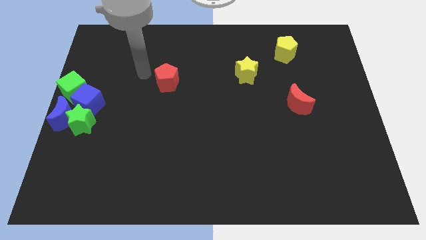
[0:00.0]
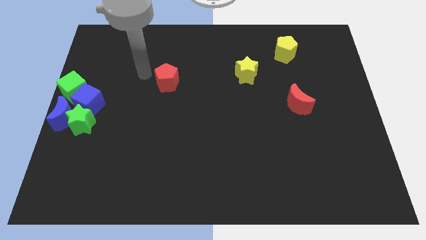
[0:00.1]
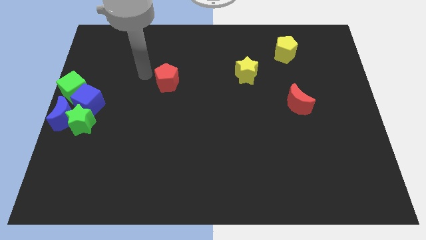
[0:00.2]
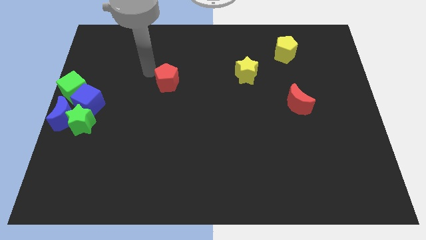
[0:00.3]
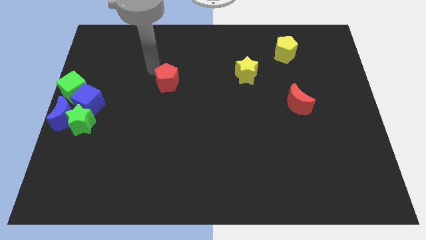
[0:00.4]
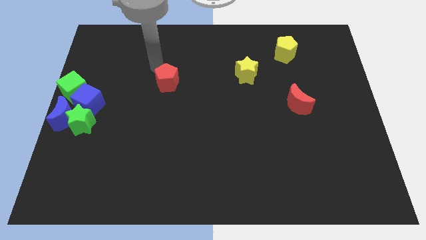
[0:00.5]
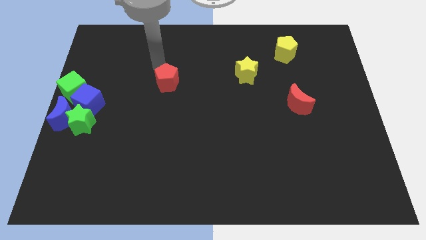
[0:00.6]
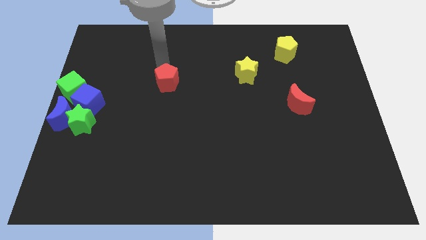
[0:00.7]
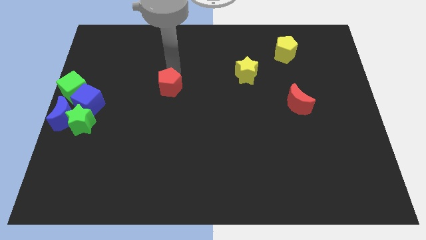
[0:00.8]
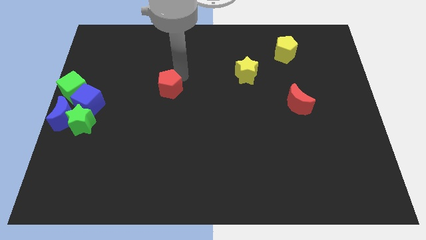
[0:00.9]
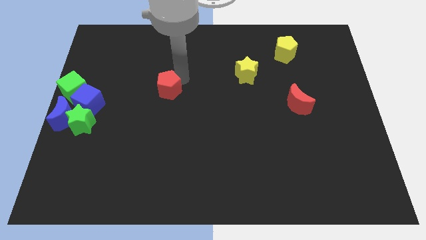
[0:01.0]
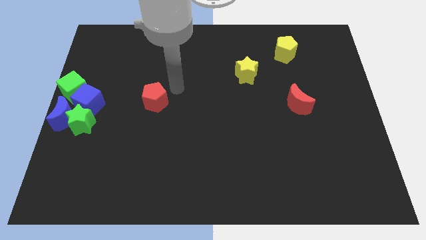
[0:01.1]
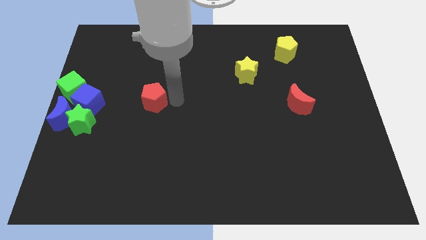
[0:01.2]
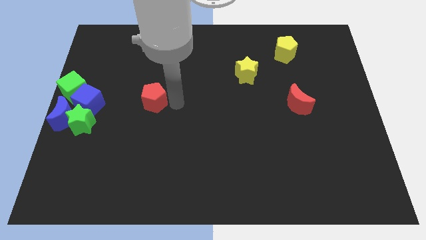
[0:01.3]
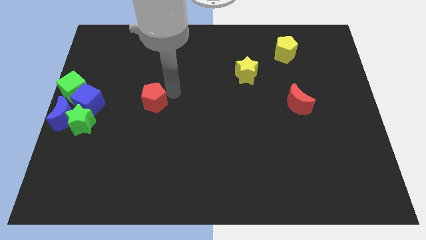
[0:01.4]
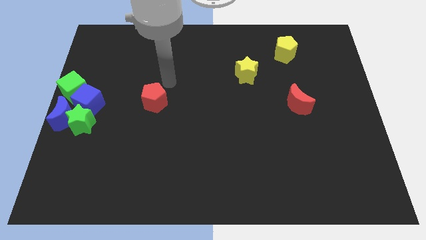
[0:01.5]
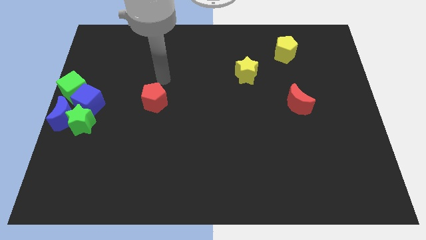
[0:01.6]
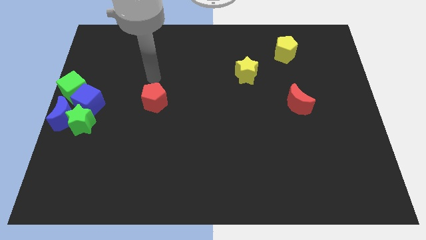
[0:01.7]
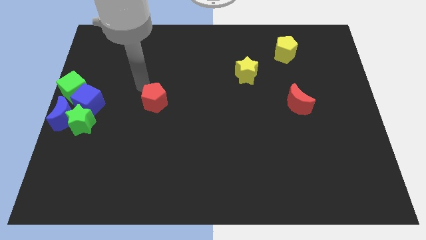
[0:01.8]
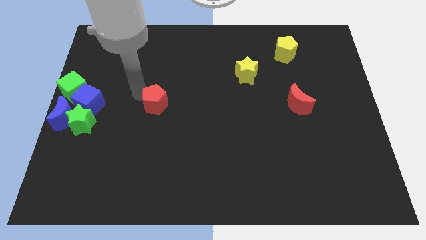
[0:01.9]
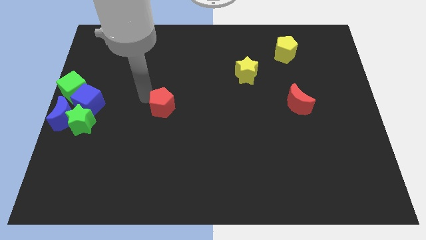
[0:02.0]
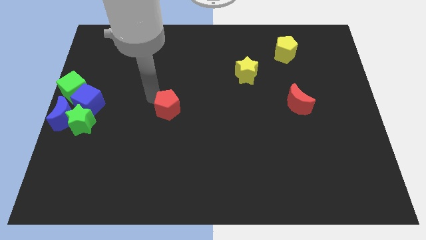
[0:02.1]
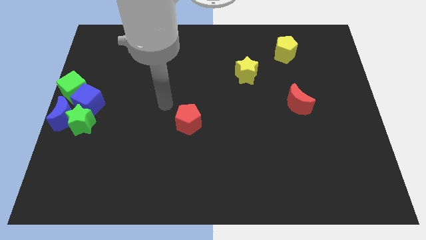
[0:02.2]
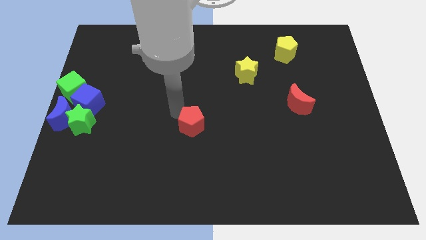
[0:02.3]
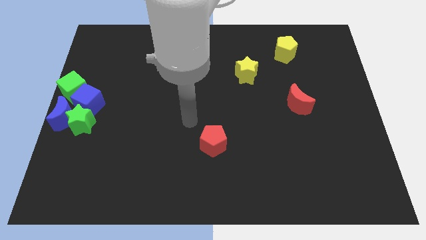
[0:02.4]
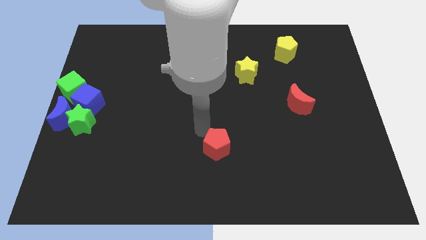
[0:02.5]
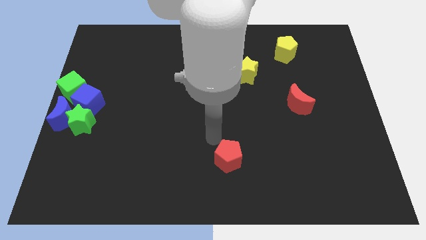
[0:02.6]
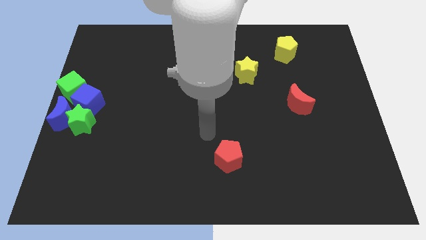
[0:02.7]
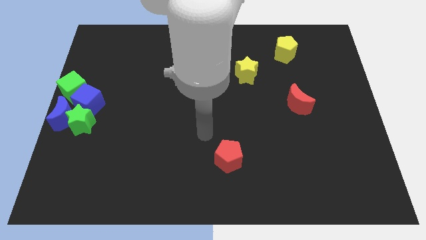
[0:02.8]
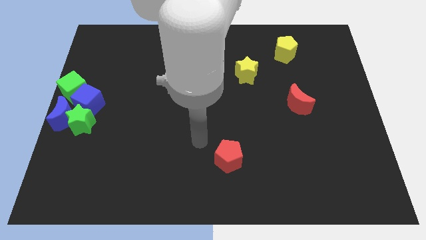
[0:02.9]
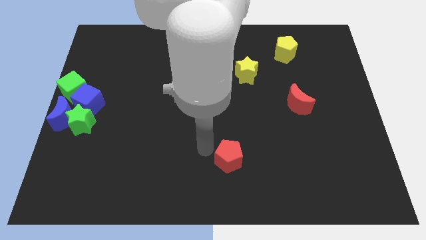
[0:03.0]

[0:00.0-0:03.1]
push red pentagon towards bottom cente

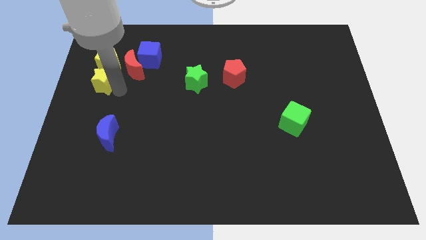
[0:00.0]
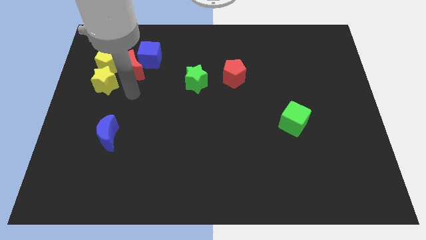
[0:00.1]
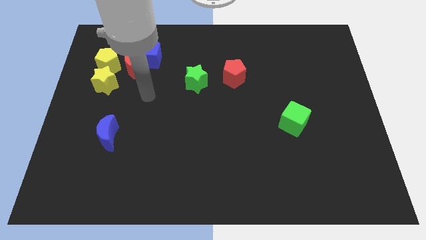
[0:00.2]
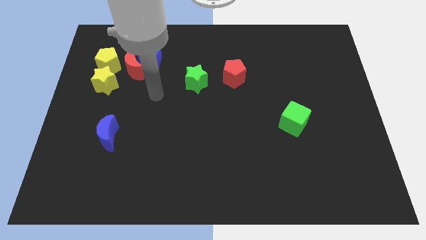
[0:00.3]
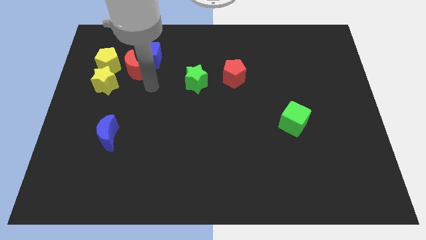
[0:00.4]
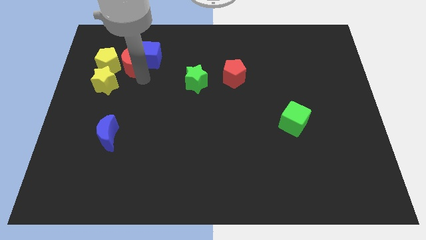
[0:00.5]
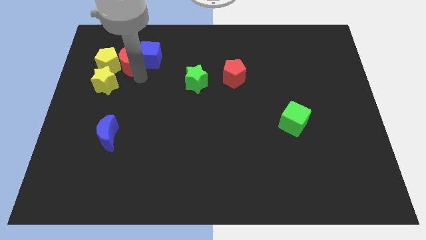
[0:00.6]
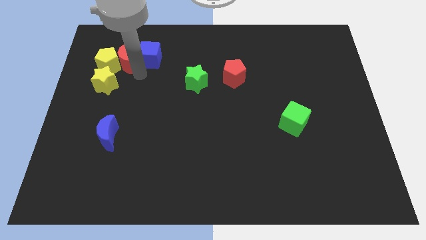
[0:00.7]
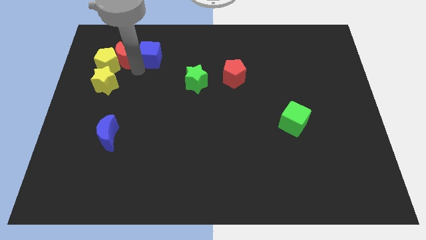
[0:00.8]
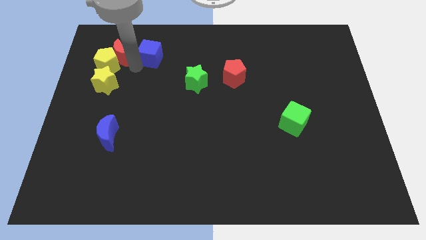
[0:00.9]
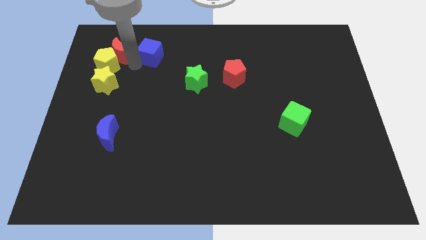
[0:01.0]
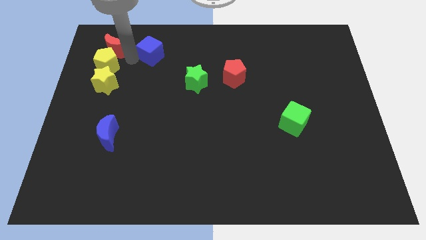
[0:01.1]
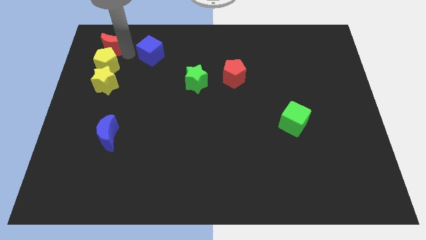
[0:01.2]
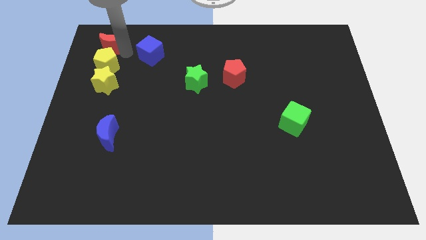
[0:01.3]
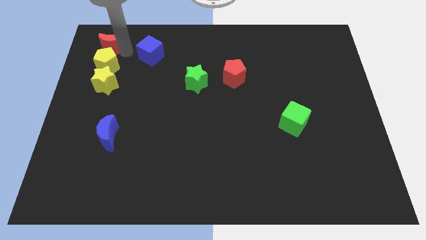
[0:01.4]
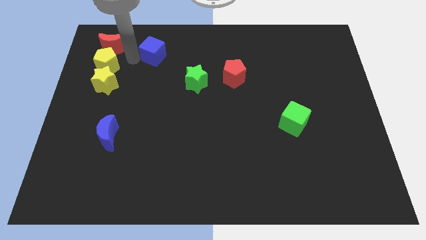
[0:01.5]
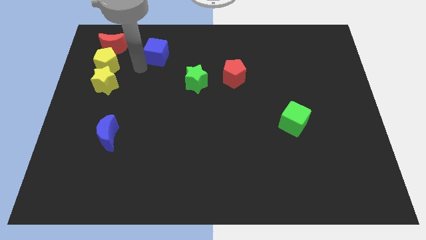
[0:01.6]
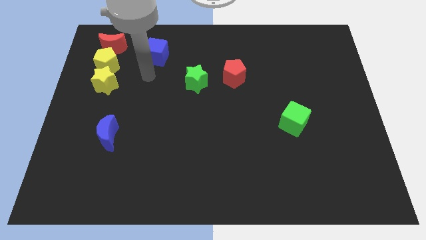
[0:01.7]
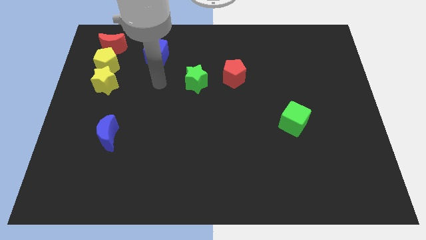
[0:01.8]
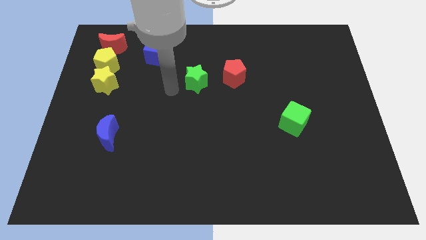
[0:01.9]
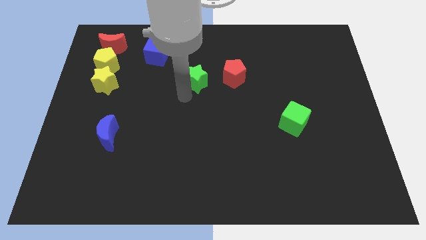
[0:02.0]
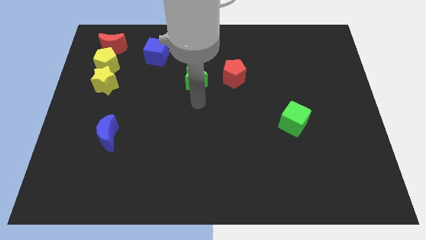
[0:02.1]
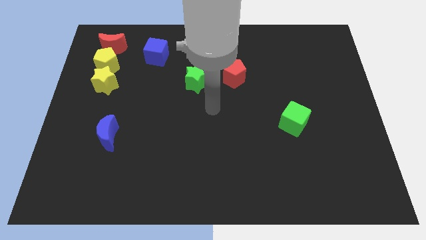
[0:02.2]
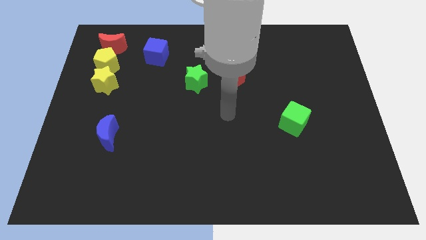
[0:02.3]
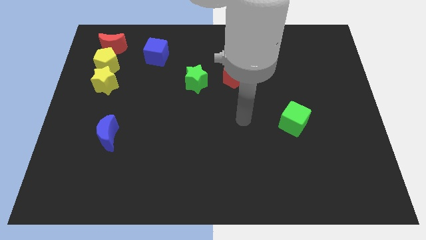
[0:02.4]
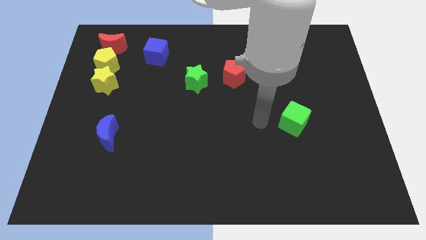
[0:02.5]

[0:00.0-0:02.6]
separate the red moon above the yellow pentagon

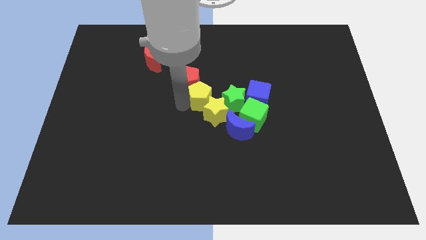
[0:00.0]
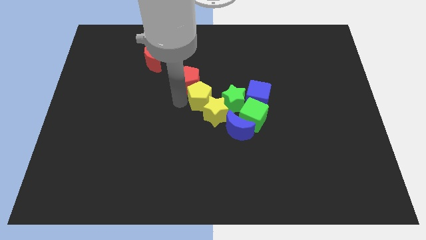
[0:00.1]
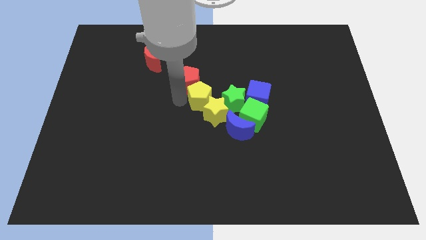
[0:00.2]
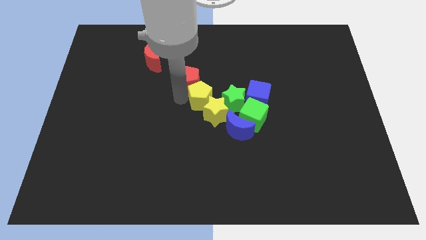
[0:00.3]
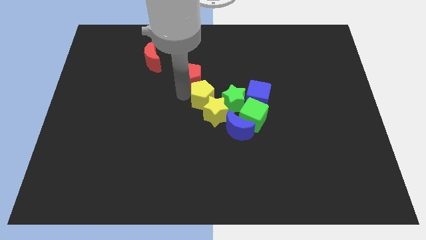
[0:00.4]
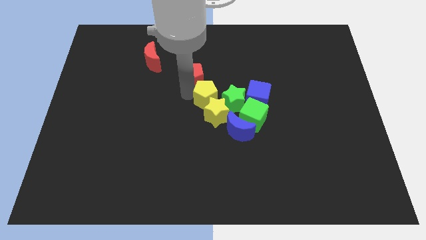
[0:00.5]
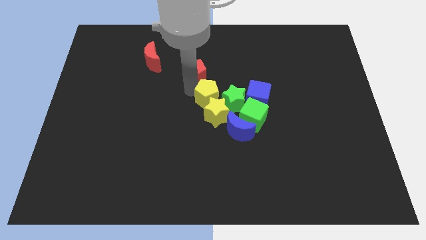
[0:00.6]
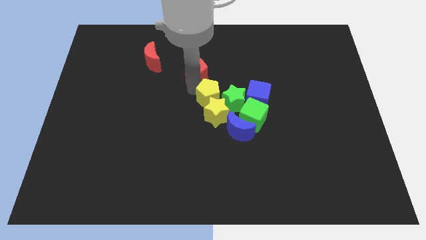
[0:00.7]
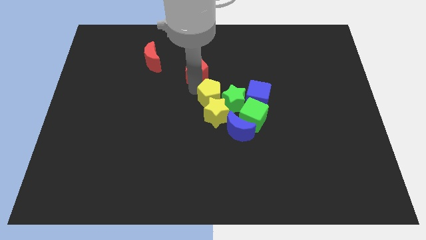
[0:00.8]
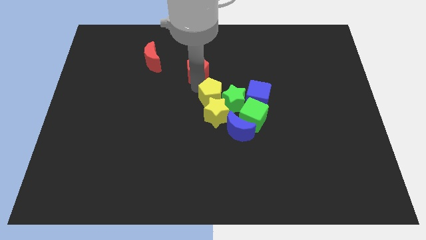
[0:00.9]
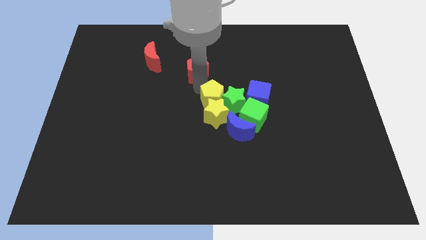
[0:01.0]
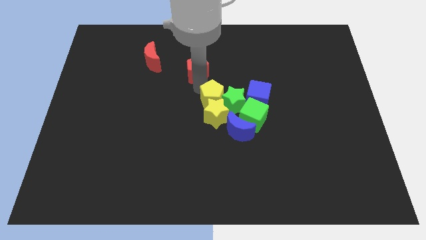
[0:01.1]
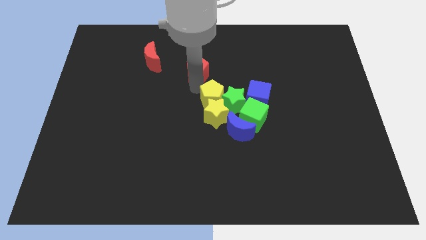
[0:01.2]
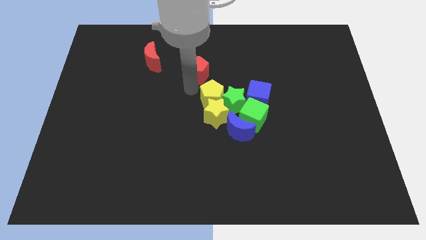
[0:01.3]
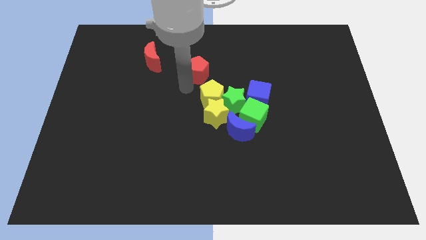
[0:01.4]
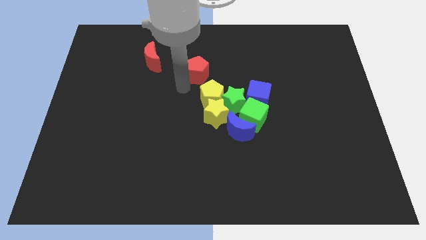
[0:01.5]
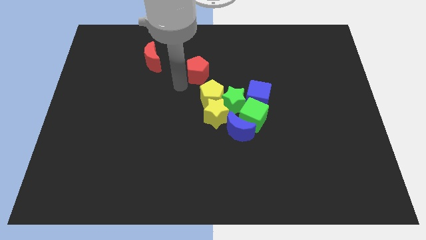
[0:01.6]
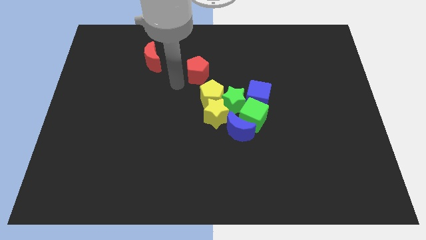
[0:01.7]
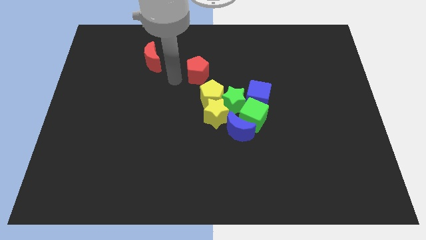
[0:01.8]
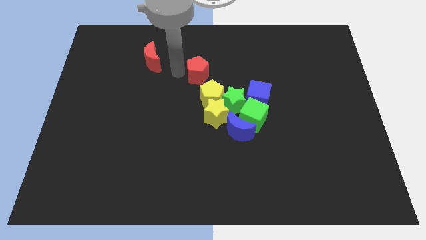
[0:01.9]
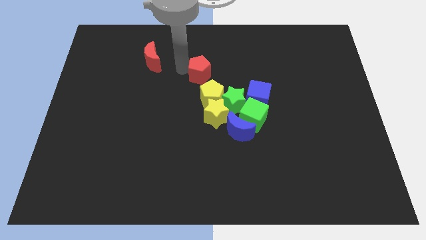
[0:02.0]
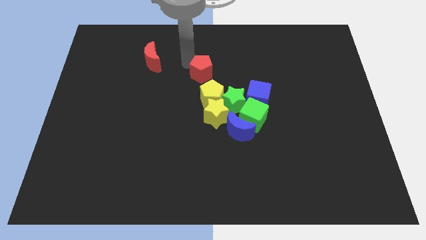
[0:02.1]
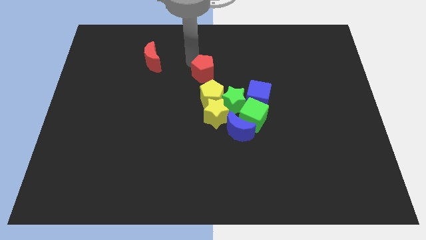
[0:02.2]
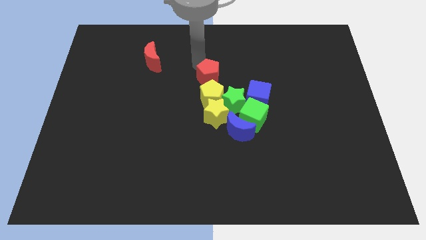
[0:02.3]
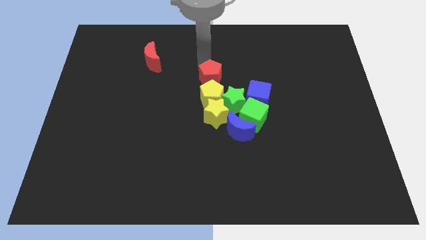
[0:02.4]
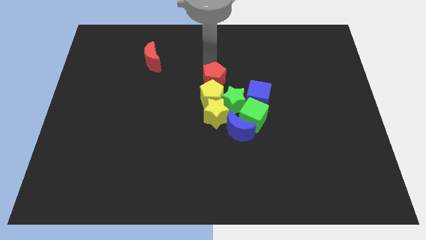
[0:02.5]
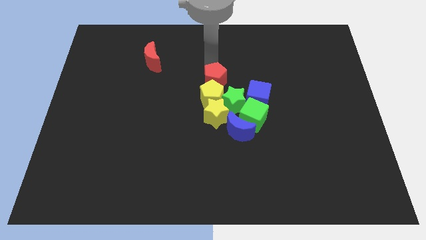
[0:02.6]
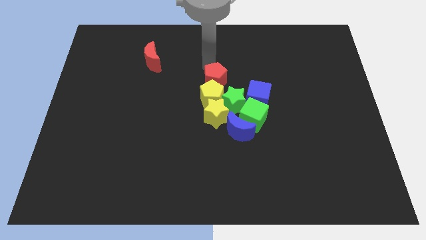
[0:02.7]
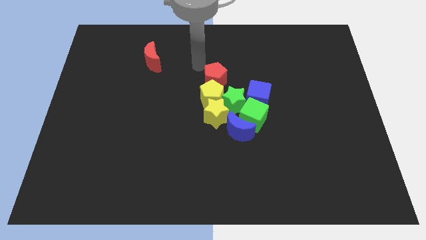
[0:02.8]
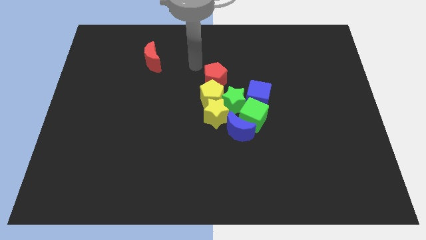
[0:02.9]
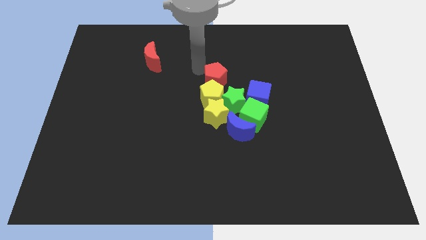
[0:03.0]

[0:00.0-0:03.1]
move the red pentagon above the yellow pentagon

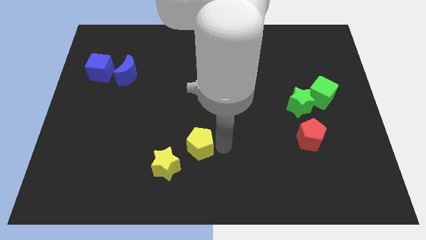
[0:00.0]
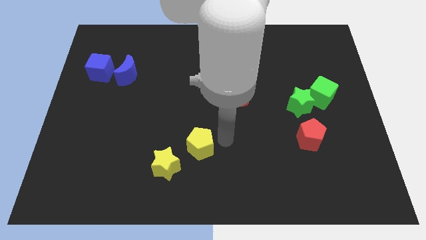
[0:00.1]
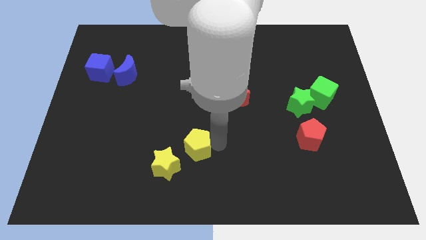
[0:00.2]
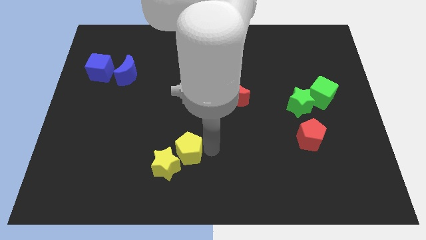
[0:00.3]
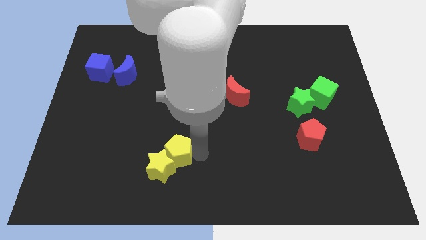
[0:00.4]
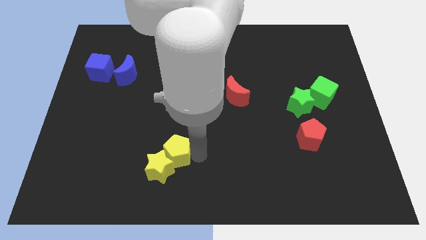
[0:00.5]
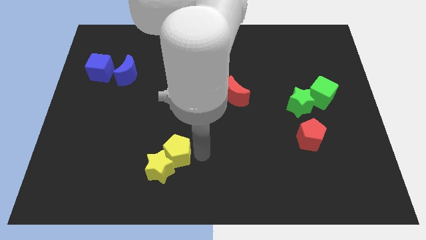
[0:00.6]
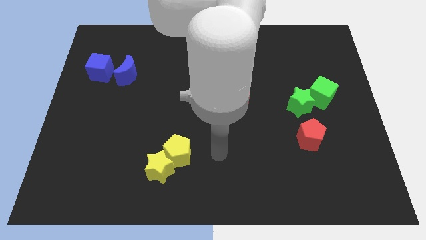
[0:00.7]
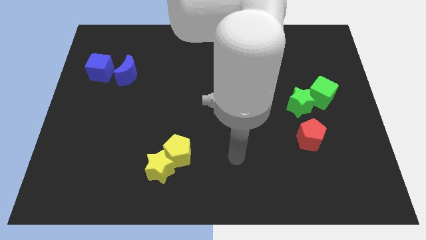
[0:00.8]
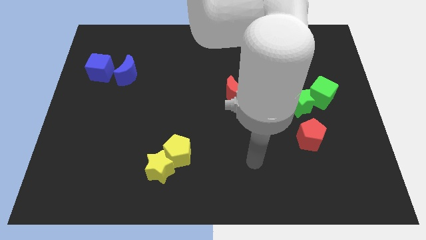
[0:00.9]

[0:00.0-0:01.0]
push the yellow pentagon into the yellow star
